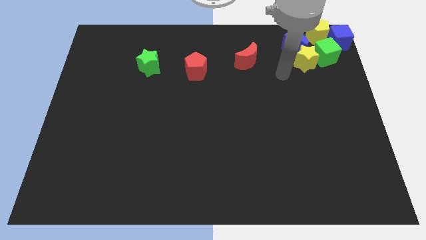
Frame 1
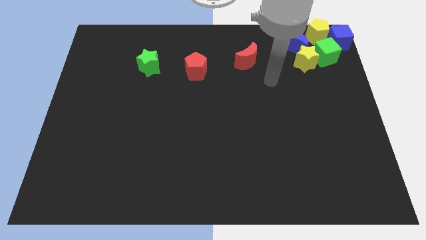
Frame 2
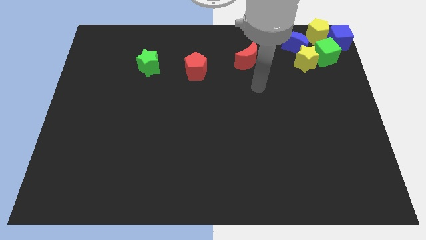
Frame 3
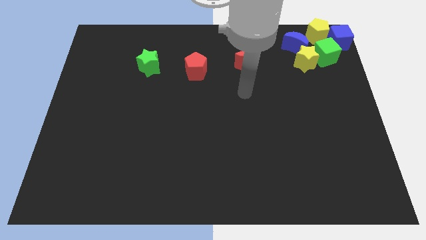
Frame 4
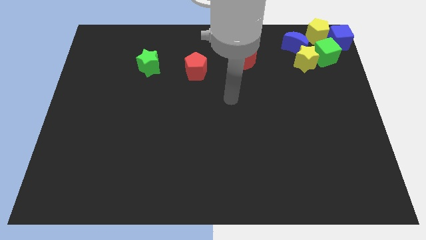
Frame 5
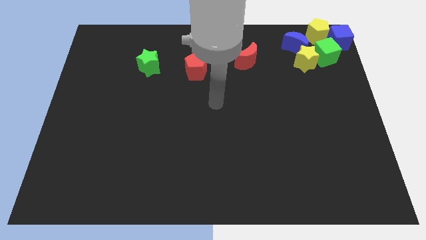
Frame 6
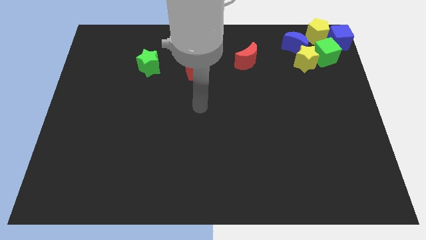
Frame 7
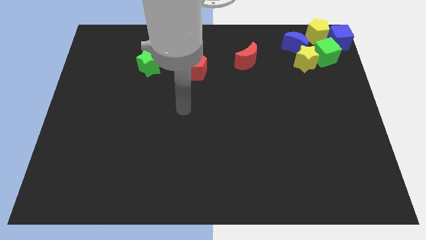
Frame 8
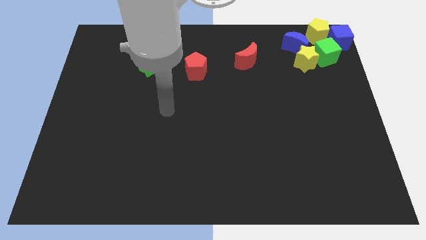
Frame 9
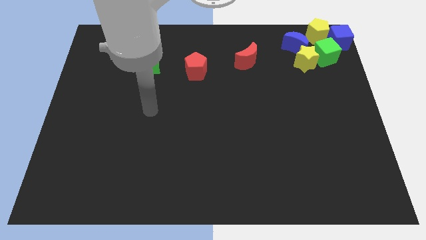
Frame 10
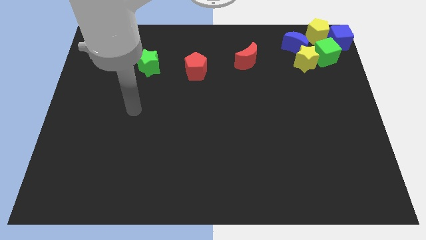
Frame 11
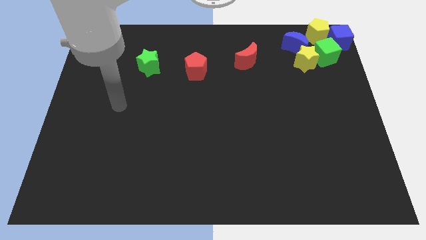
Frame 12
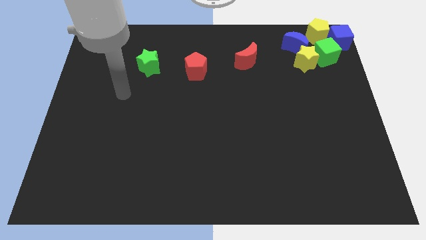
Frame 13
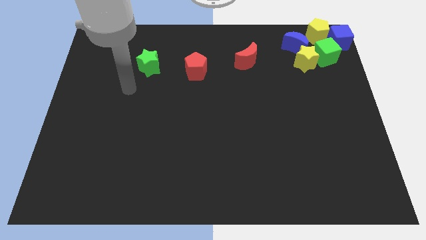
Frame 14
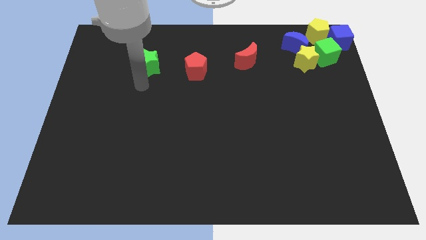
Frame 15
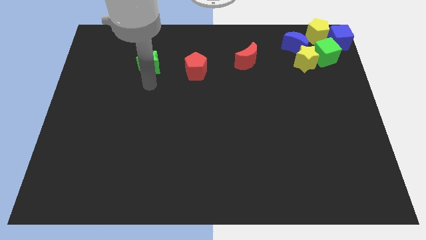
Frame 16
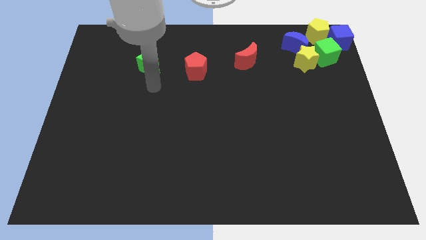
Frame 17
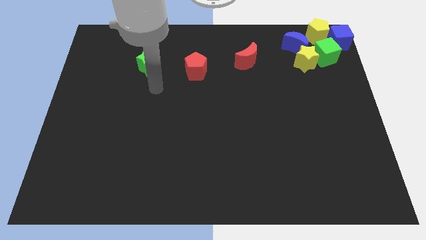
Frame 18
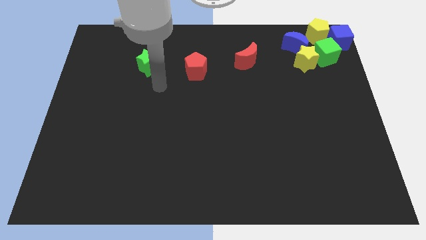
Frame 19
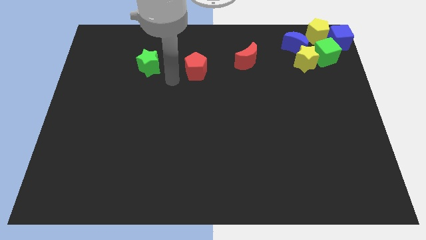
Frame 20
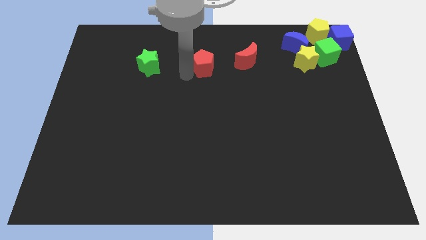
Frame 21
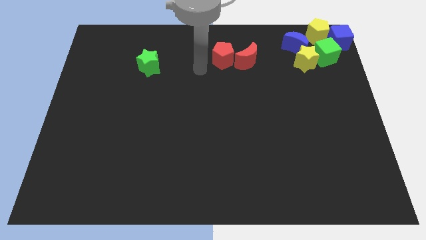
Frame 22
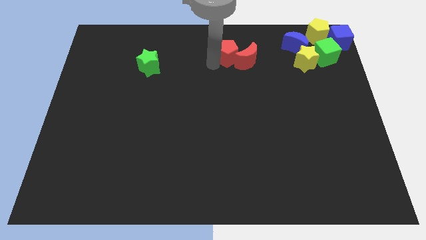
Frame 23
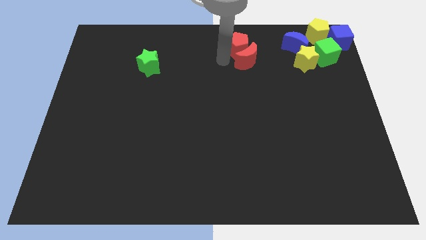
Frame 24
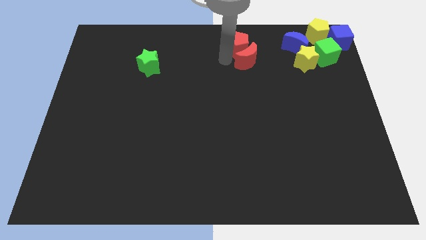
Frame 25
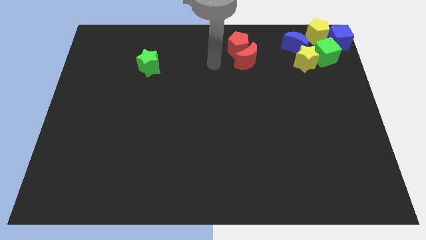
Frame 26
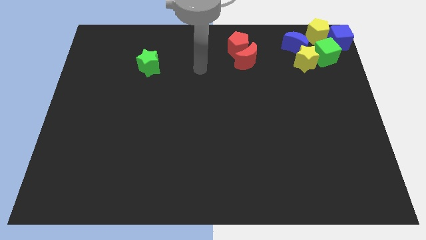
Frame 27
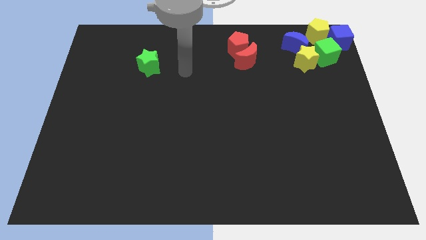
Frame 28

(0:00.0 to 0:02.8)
push the red pentagon to the top of red crescent

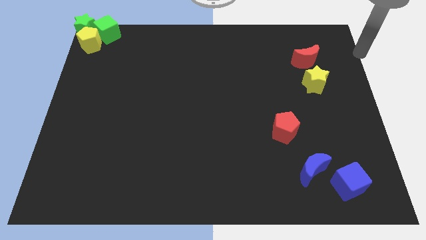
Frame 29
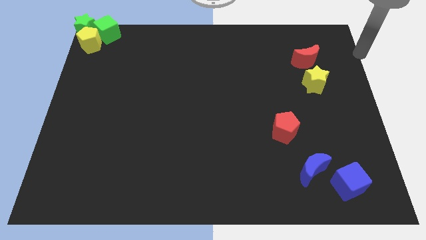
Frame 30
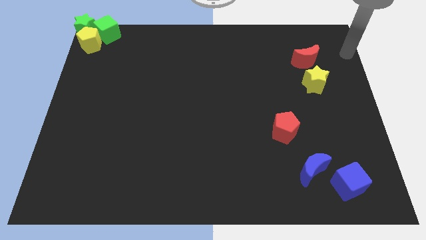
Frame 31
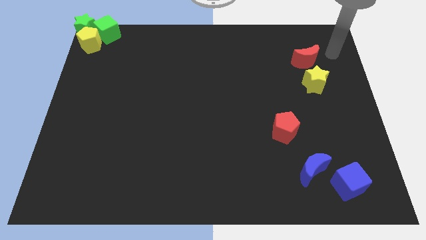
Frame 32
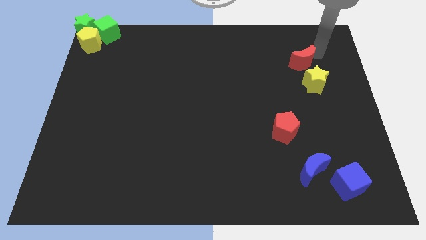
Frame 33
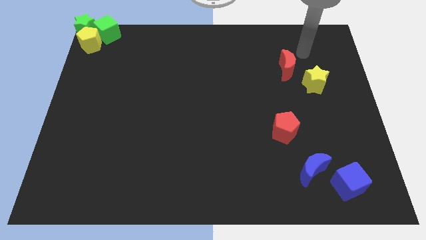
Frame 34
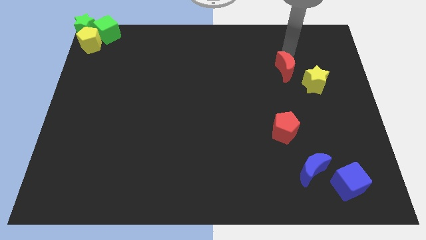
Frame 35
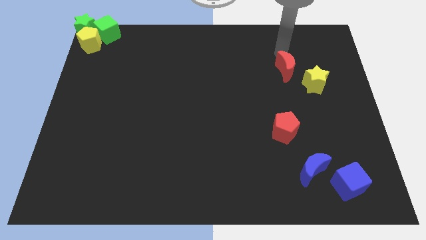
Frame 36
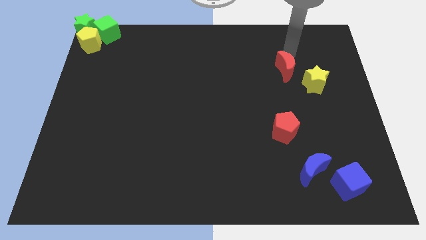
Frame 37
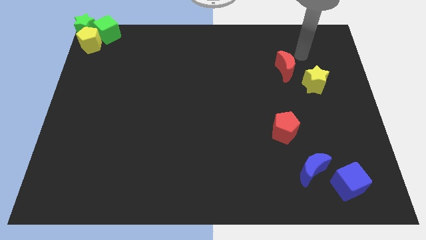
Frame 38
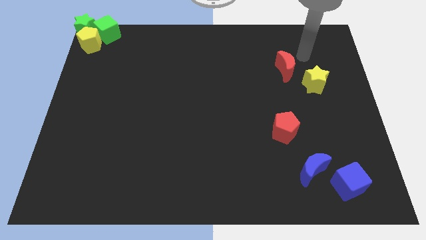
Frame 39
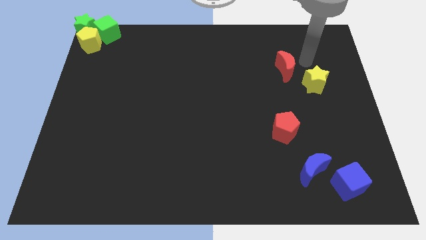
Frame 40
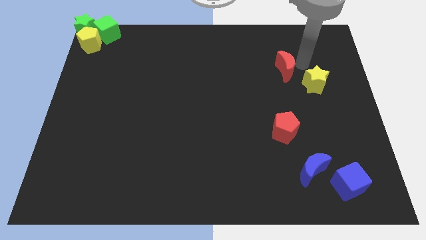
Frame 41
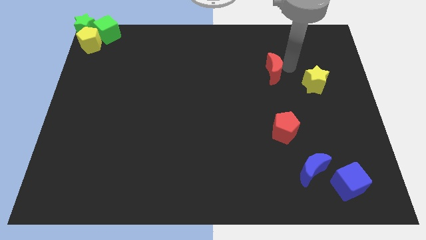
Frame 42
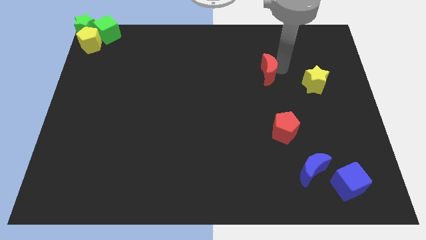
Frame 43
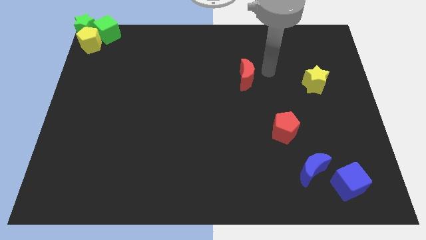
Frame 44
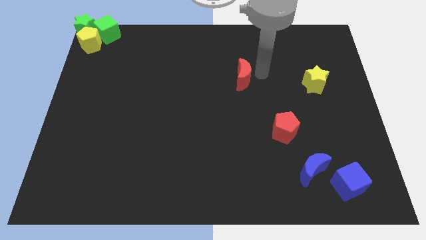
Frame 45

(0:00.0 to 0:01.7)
push the red moon towards the left side

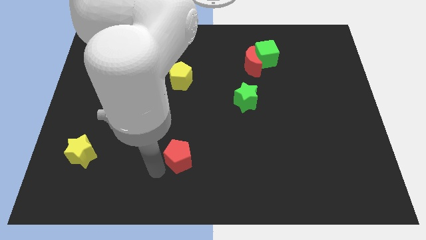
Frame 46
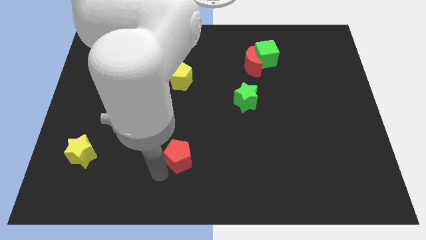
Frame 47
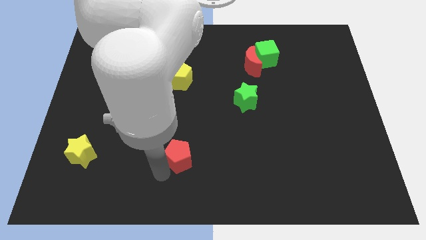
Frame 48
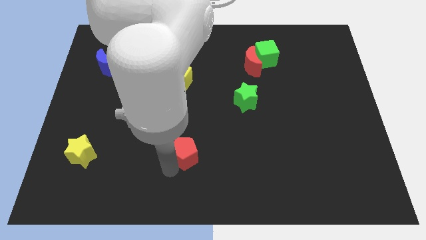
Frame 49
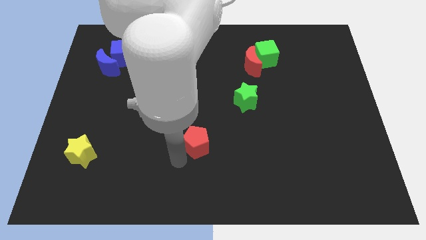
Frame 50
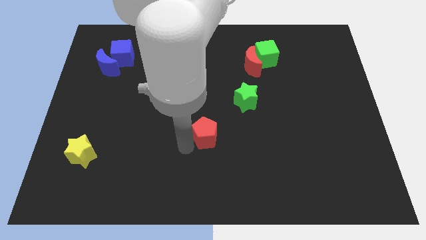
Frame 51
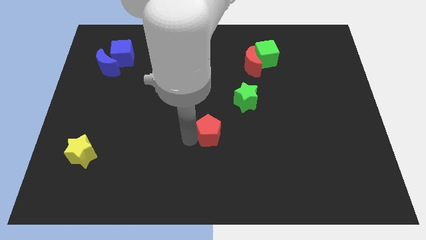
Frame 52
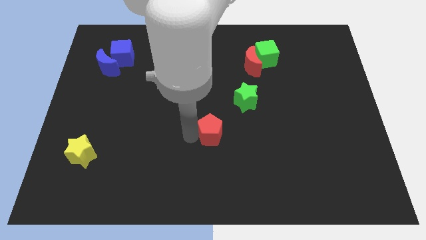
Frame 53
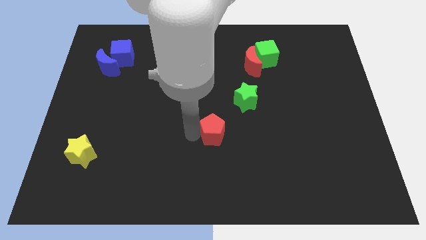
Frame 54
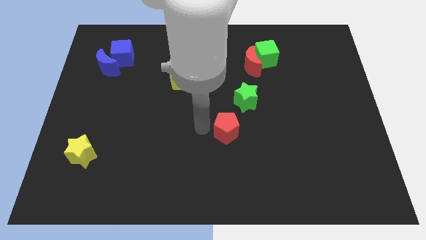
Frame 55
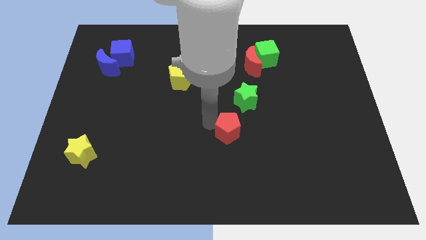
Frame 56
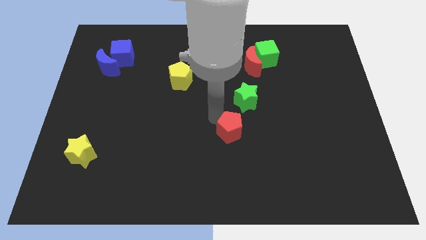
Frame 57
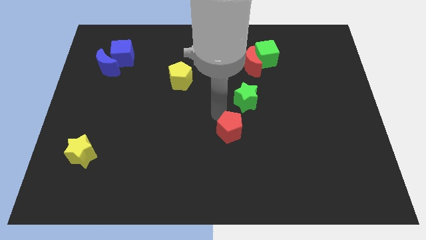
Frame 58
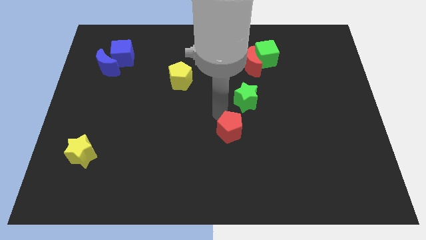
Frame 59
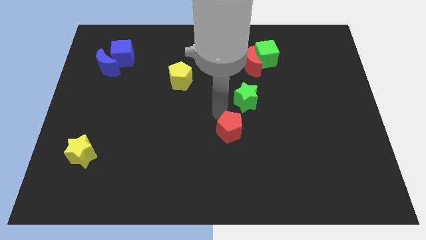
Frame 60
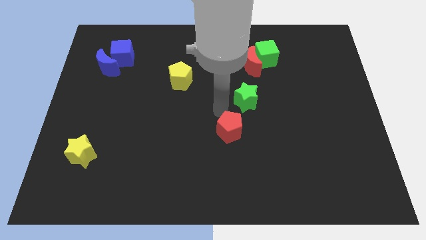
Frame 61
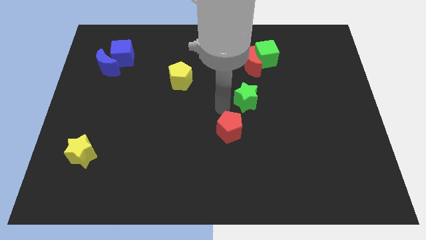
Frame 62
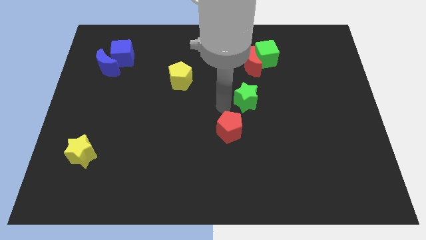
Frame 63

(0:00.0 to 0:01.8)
move the red pentagon to the to the bottom center of the board

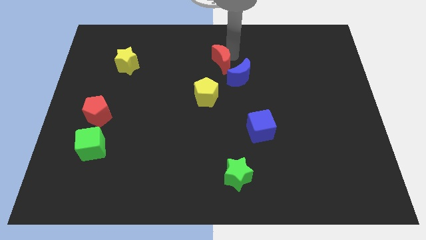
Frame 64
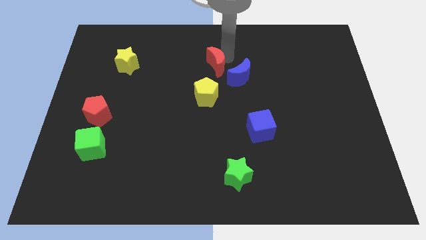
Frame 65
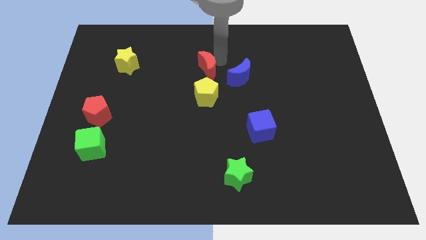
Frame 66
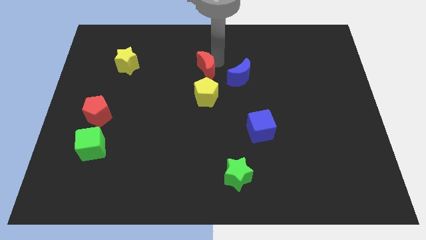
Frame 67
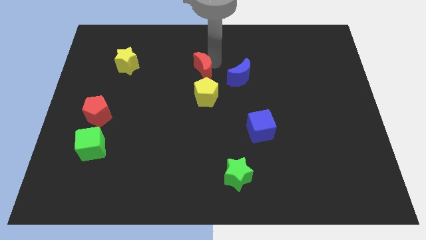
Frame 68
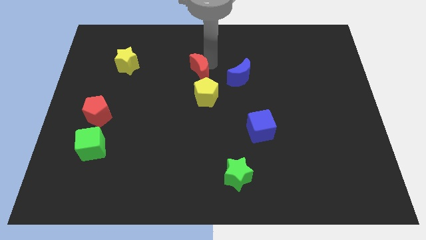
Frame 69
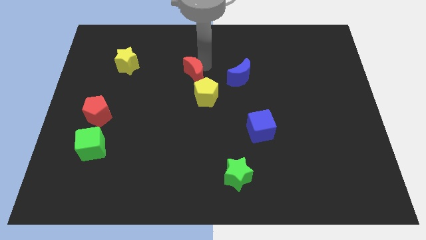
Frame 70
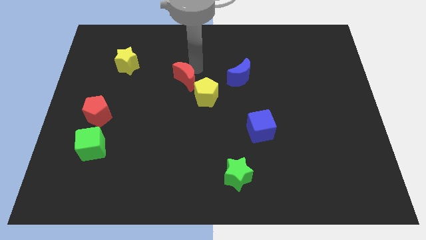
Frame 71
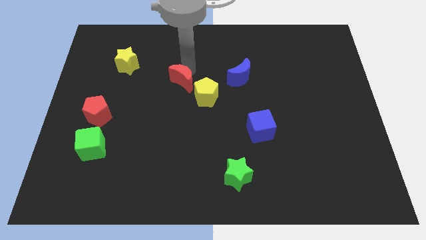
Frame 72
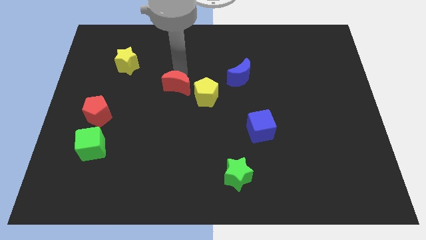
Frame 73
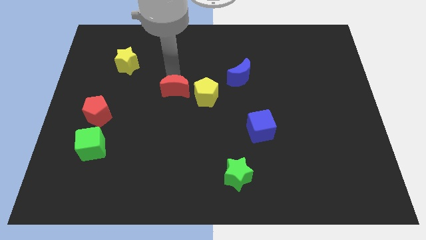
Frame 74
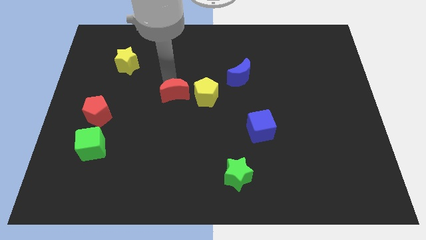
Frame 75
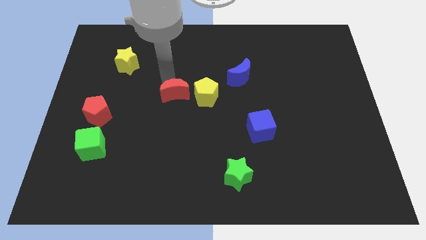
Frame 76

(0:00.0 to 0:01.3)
slide red moon to the left of yellow pentagon

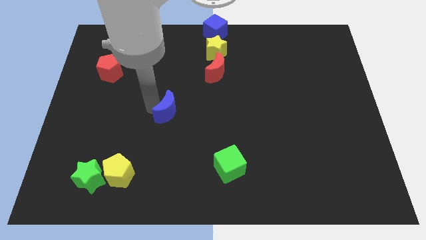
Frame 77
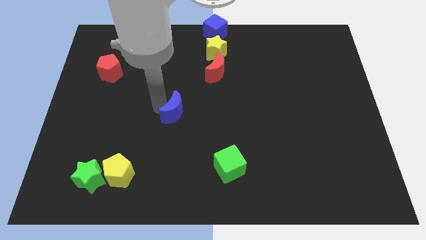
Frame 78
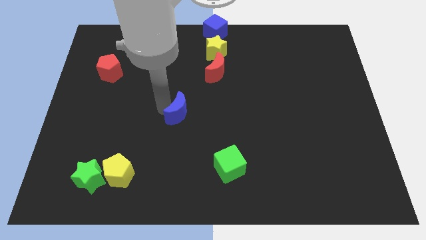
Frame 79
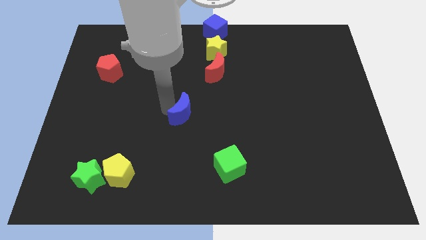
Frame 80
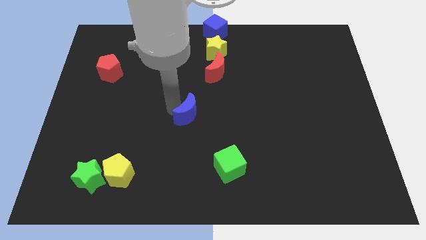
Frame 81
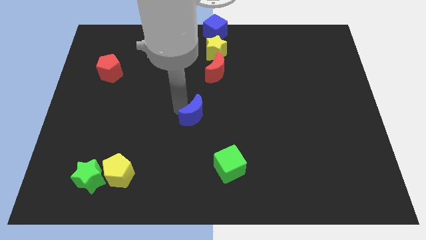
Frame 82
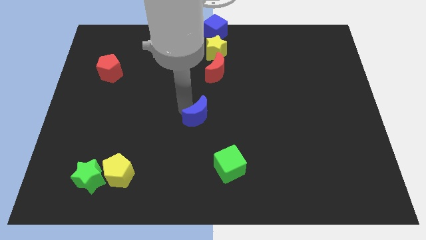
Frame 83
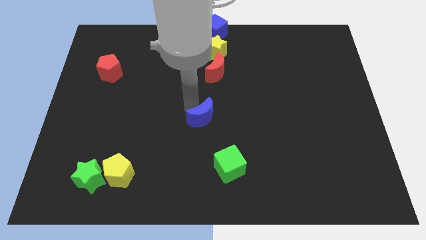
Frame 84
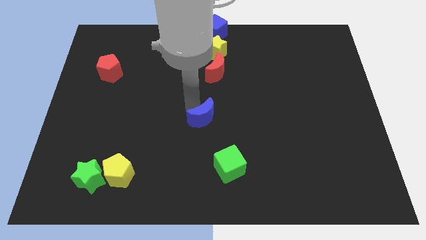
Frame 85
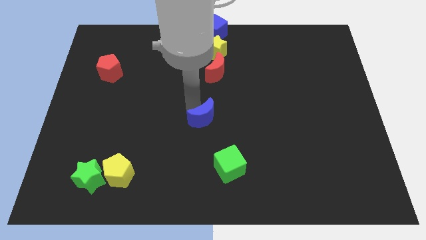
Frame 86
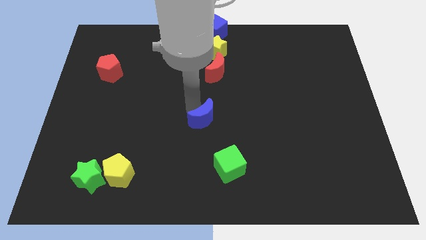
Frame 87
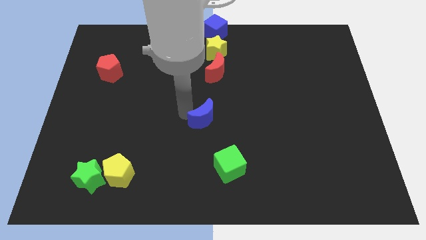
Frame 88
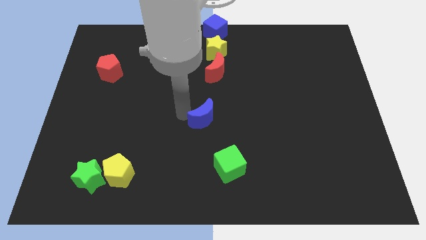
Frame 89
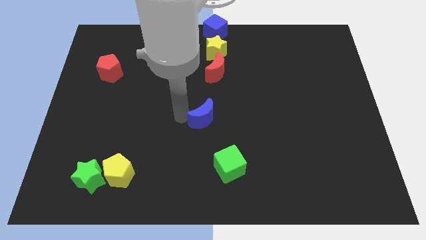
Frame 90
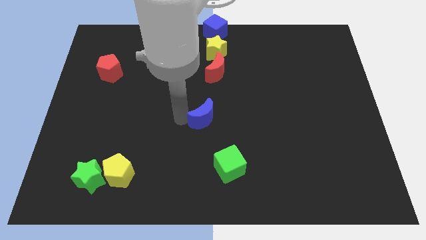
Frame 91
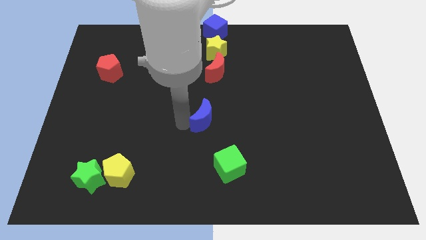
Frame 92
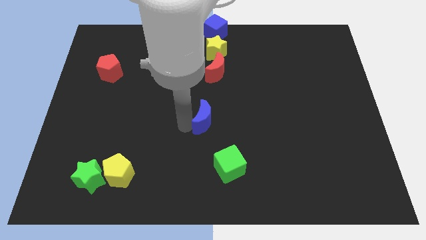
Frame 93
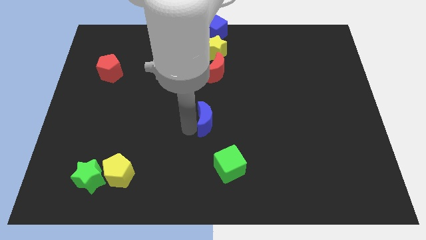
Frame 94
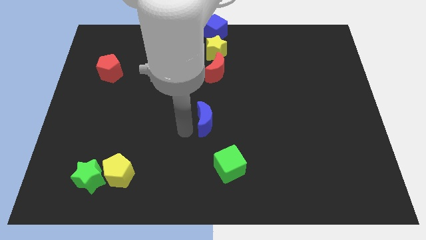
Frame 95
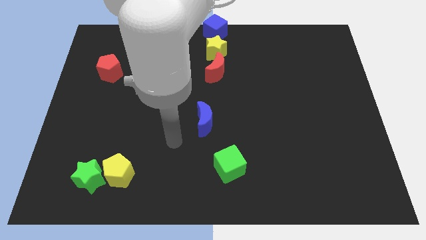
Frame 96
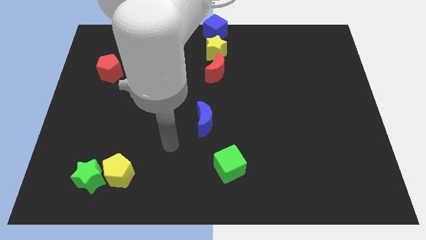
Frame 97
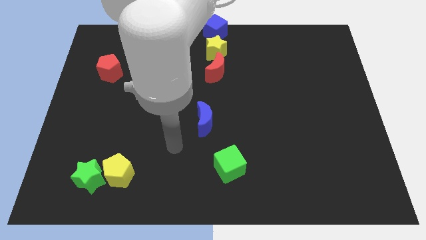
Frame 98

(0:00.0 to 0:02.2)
move the blue moon to the center of the board
